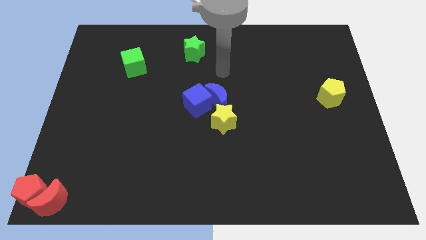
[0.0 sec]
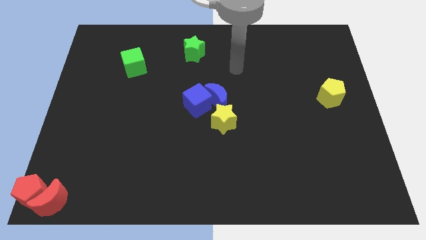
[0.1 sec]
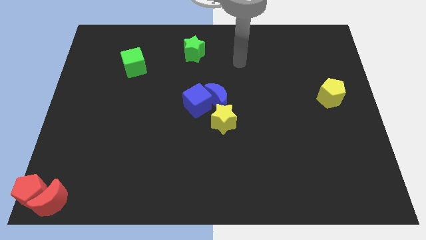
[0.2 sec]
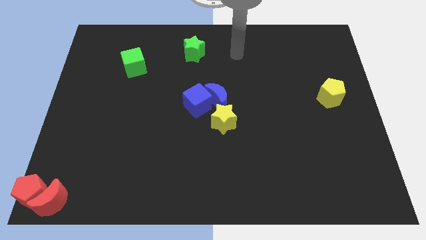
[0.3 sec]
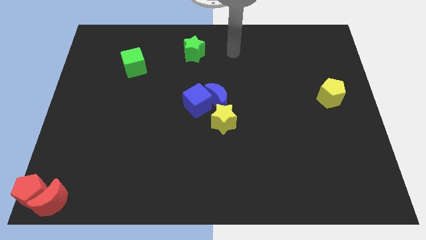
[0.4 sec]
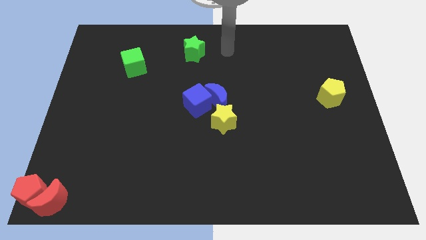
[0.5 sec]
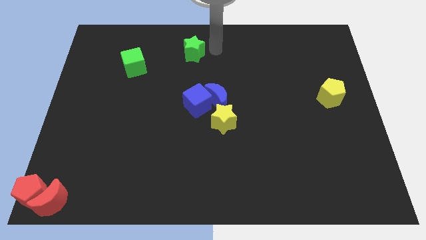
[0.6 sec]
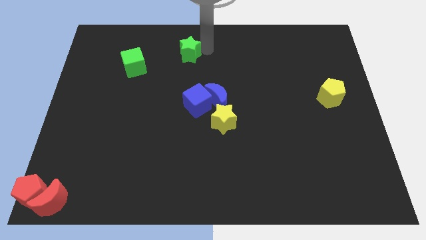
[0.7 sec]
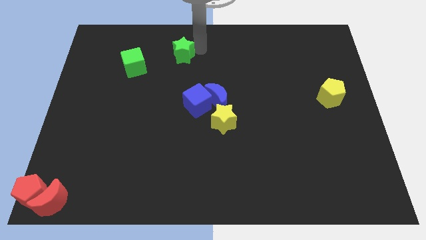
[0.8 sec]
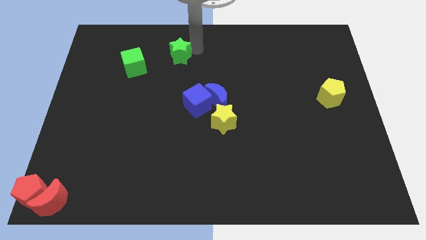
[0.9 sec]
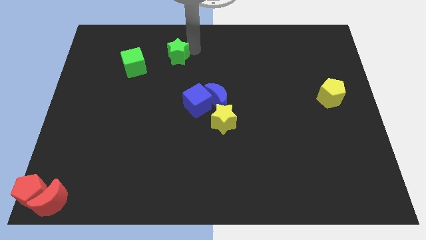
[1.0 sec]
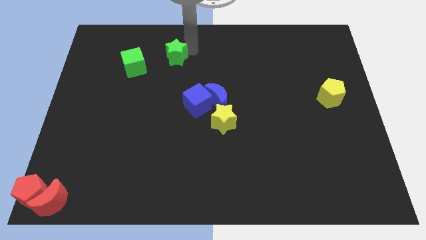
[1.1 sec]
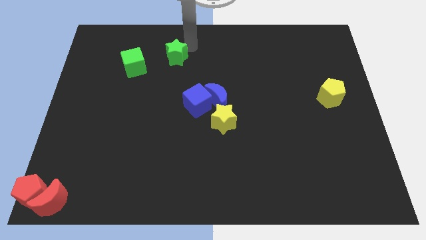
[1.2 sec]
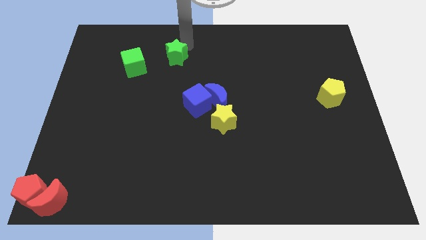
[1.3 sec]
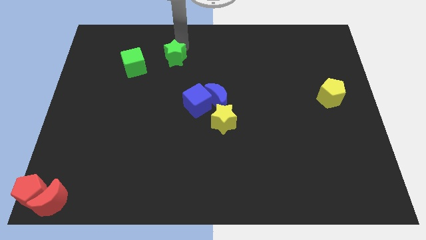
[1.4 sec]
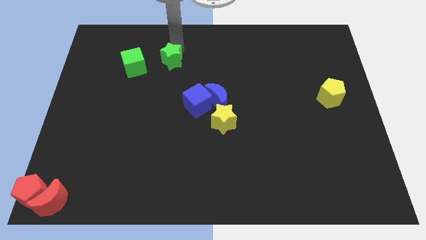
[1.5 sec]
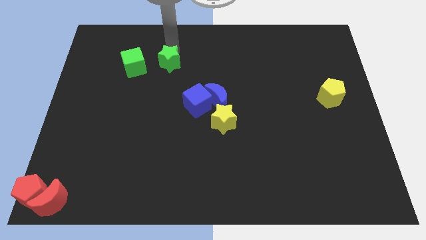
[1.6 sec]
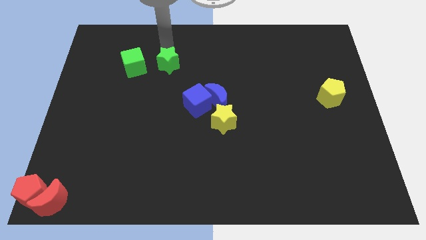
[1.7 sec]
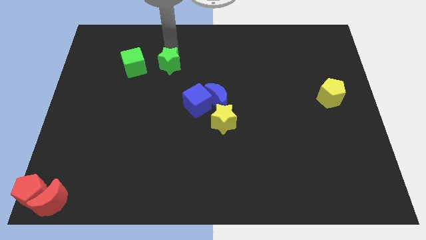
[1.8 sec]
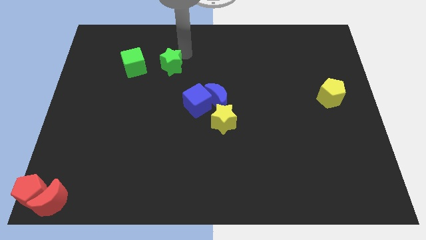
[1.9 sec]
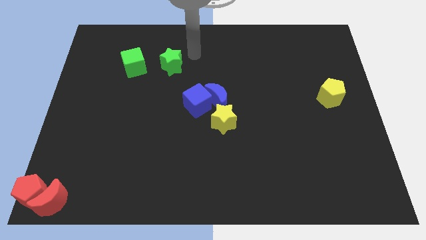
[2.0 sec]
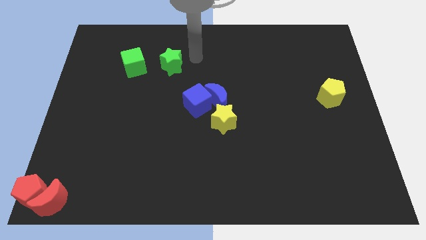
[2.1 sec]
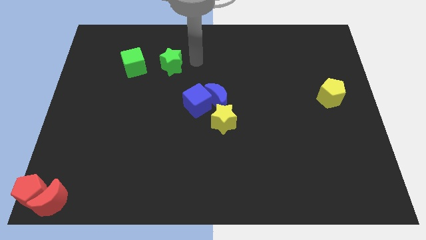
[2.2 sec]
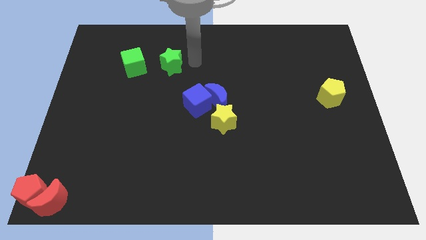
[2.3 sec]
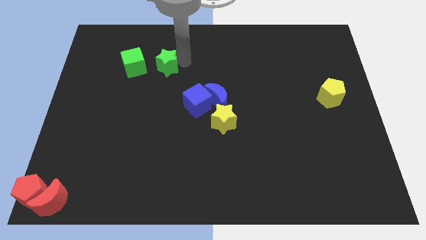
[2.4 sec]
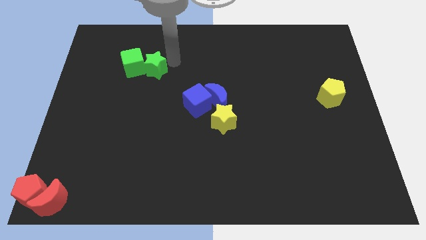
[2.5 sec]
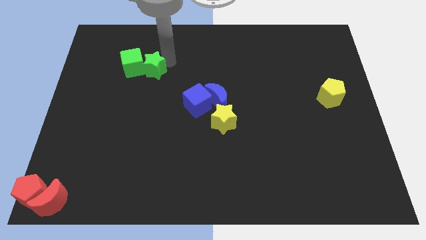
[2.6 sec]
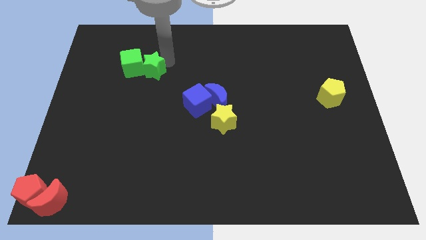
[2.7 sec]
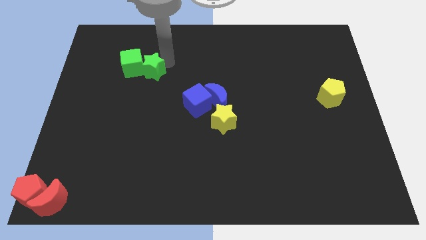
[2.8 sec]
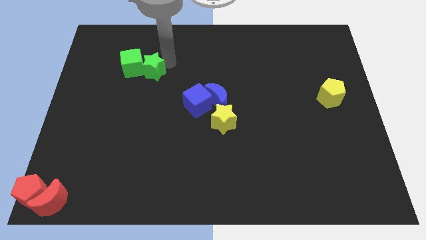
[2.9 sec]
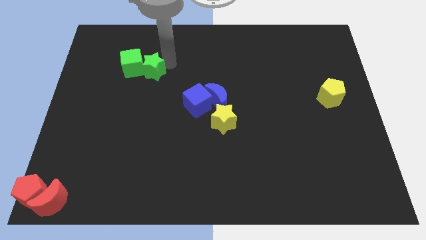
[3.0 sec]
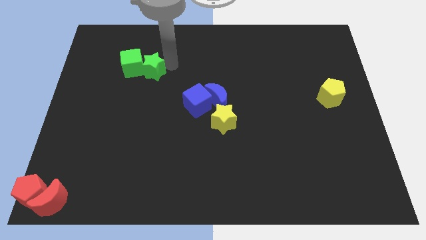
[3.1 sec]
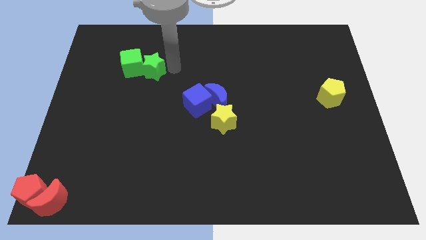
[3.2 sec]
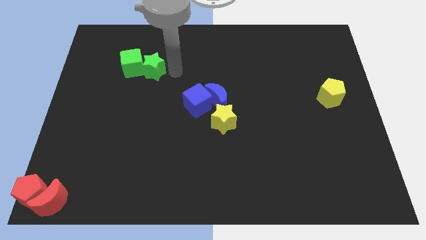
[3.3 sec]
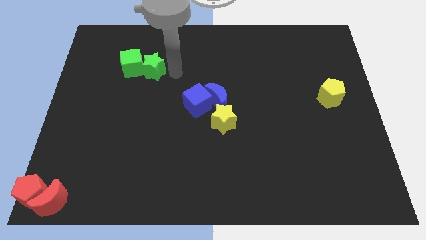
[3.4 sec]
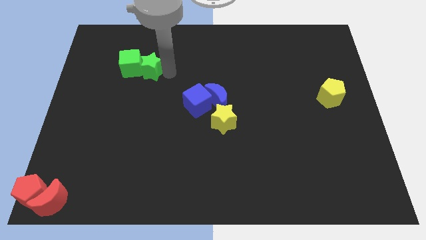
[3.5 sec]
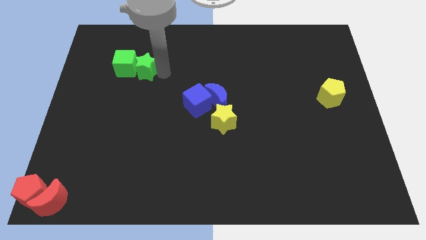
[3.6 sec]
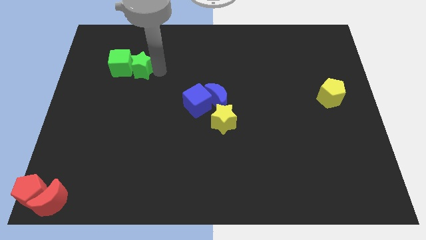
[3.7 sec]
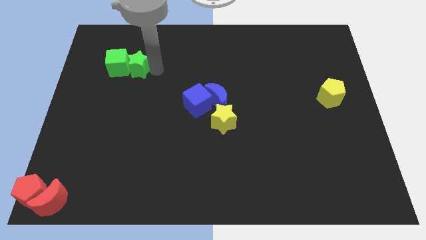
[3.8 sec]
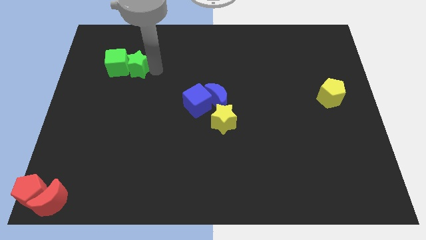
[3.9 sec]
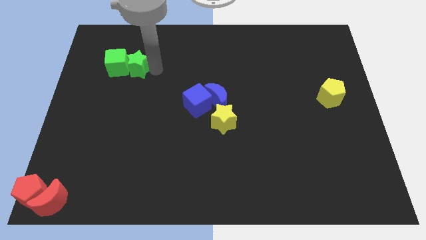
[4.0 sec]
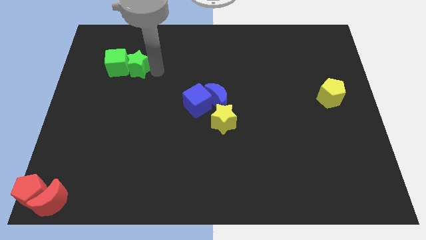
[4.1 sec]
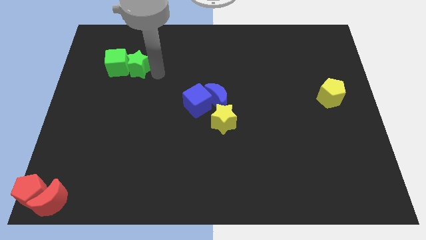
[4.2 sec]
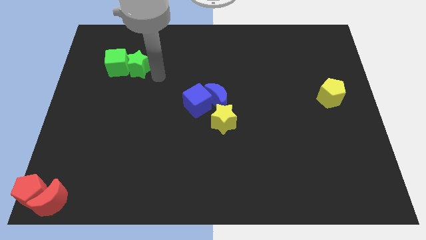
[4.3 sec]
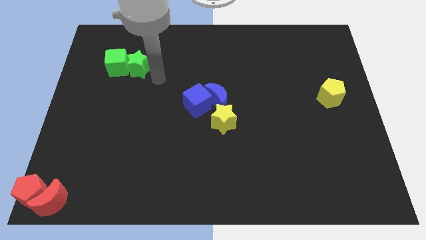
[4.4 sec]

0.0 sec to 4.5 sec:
move the green star into the green cube

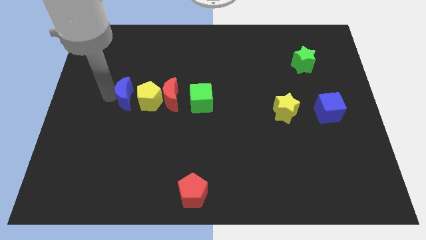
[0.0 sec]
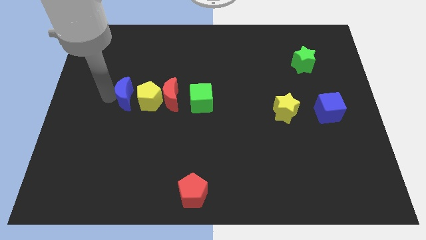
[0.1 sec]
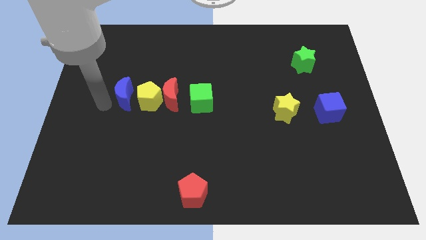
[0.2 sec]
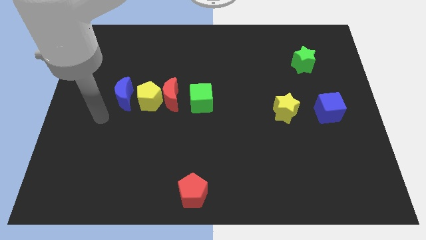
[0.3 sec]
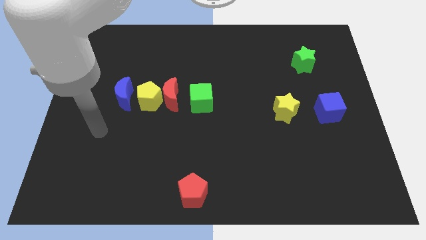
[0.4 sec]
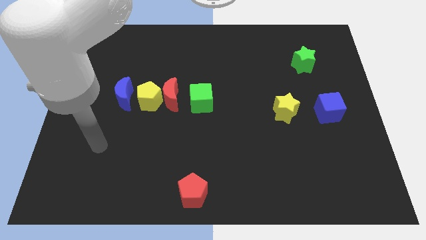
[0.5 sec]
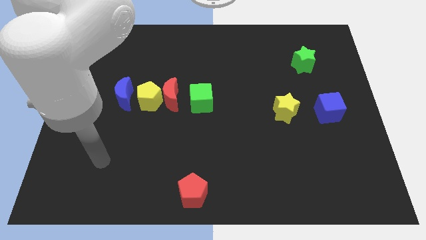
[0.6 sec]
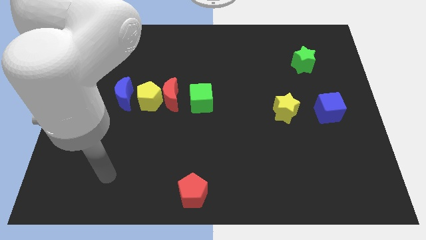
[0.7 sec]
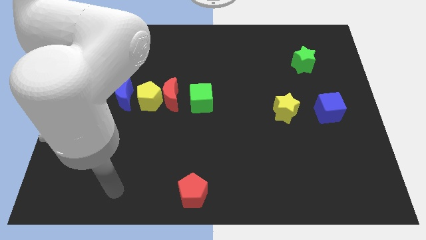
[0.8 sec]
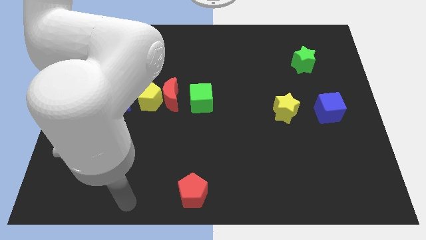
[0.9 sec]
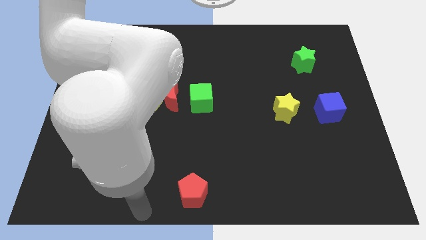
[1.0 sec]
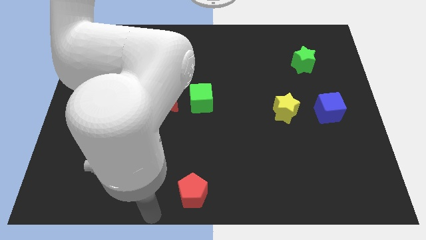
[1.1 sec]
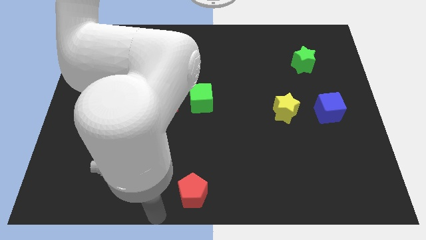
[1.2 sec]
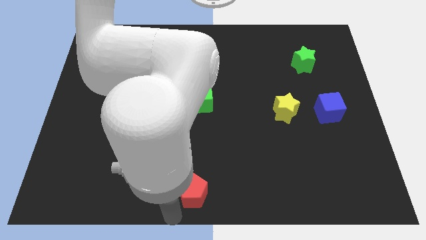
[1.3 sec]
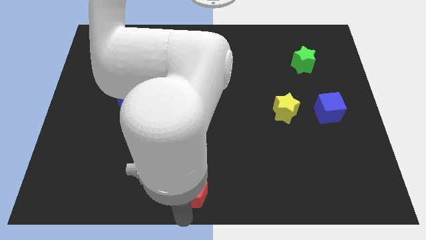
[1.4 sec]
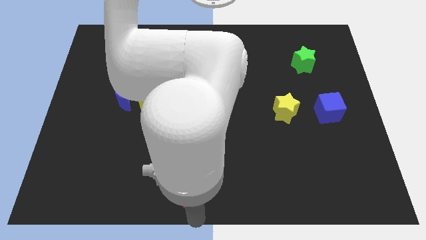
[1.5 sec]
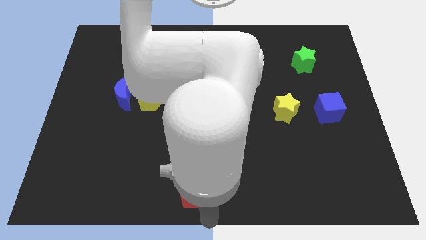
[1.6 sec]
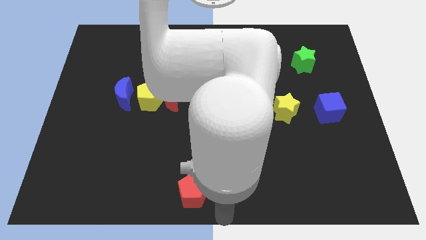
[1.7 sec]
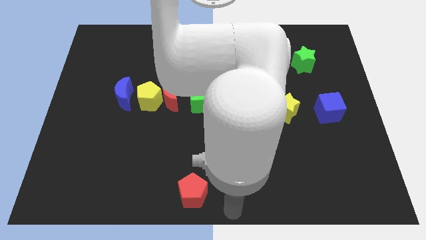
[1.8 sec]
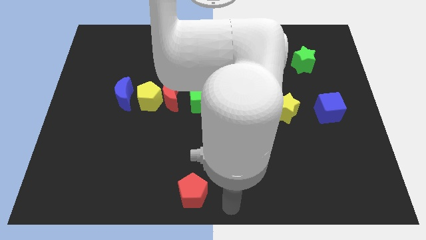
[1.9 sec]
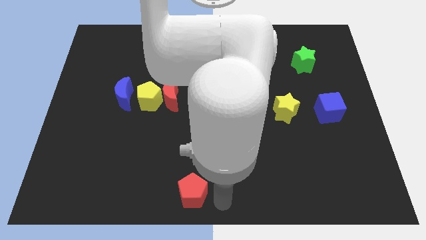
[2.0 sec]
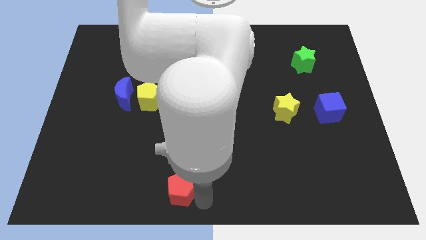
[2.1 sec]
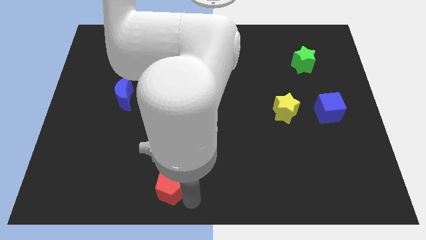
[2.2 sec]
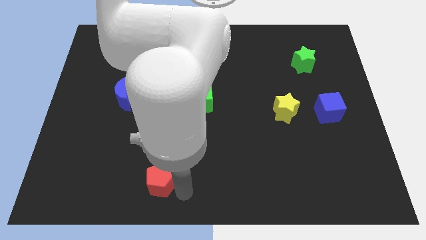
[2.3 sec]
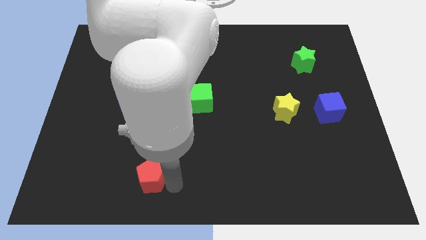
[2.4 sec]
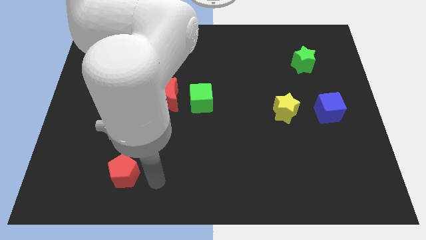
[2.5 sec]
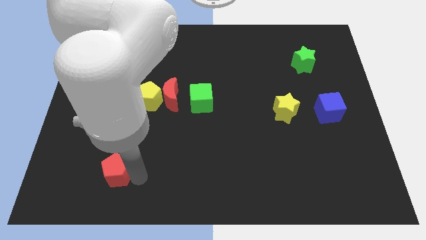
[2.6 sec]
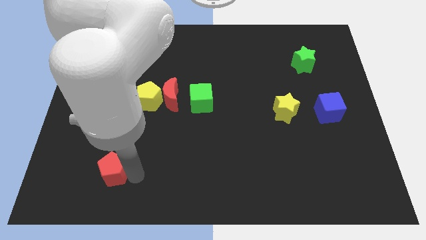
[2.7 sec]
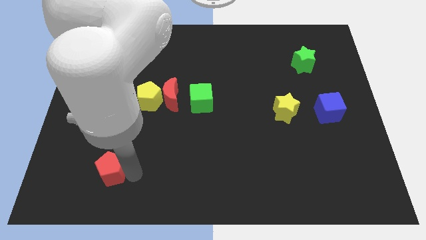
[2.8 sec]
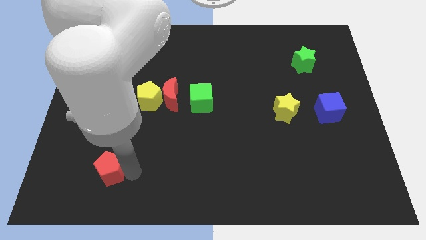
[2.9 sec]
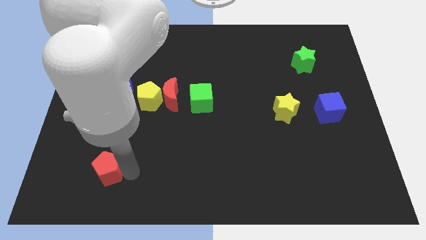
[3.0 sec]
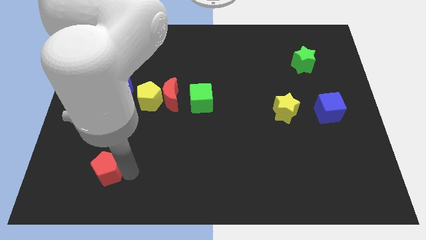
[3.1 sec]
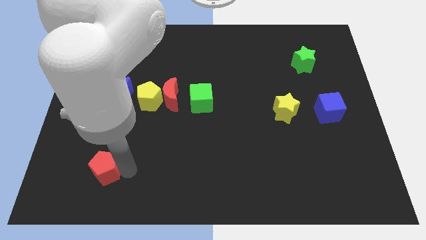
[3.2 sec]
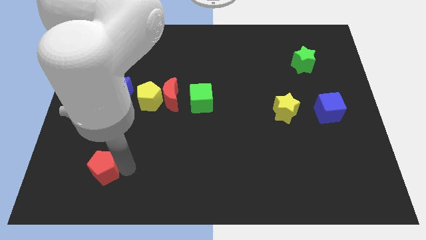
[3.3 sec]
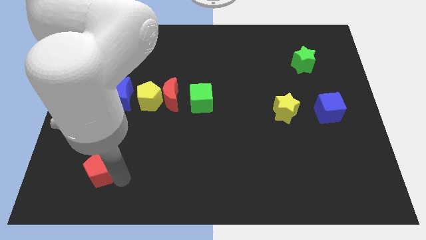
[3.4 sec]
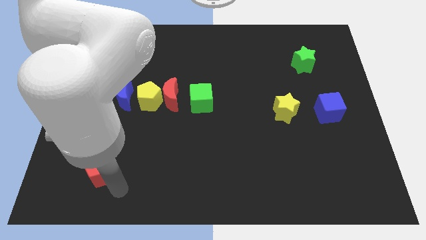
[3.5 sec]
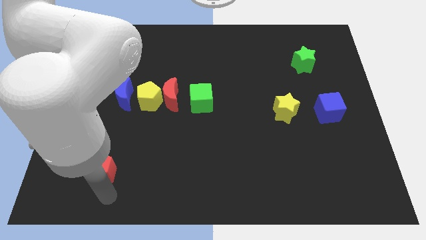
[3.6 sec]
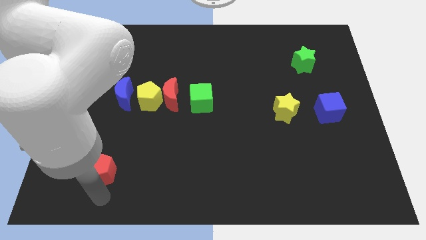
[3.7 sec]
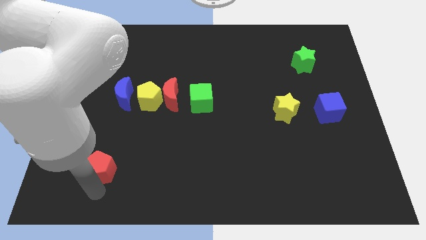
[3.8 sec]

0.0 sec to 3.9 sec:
push the red pentagon towards the left side of the board

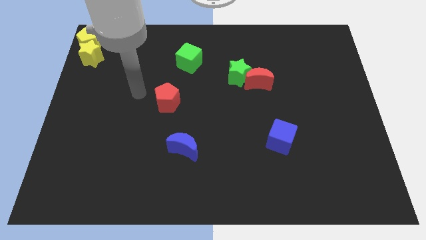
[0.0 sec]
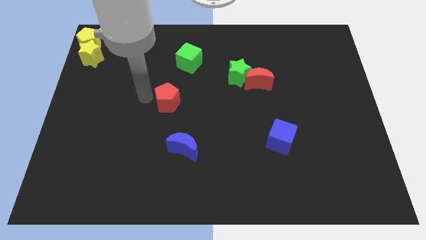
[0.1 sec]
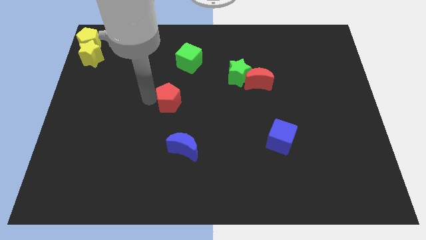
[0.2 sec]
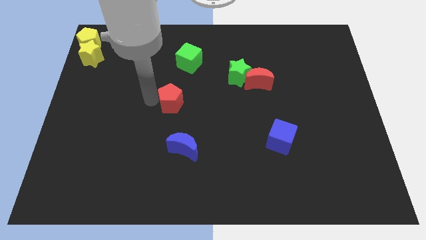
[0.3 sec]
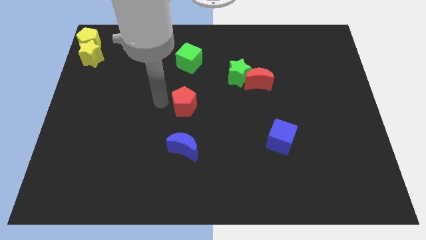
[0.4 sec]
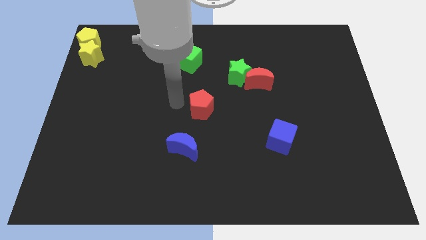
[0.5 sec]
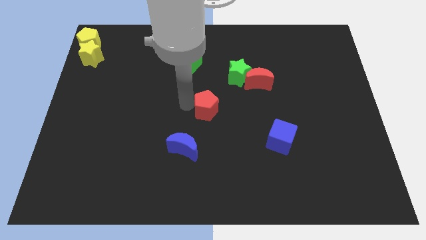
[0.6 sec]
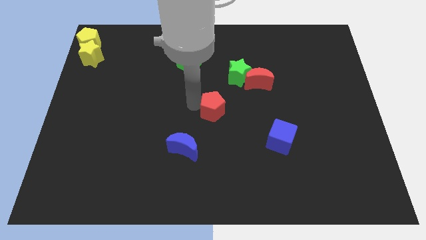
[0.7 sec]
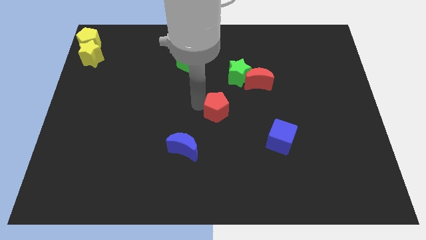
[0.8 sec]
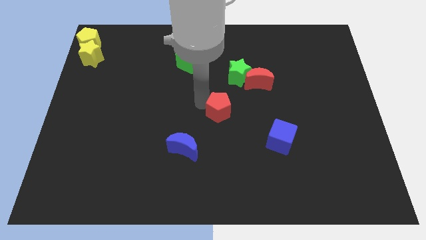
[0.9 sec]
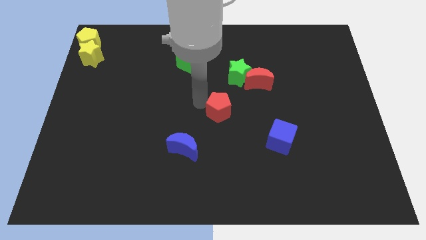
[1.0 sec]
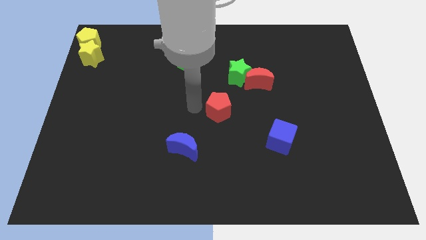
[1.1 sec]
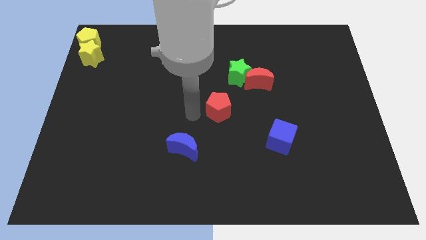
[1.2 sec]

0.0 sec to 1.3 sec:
move the red pentagon to the center of board
